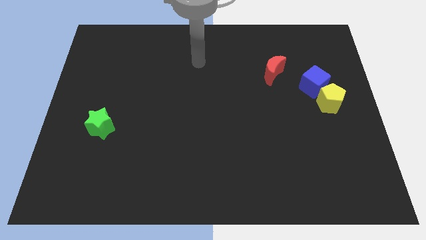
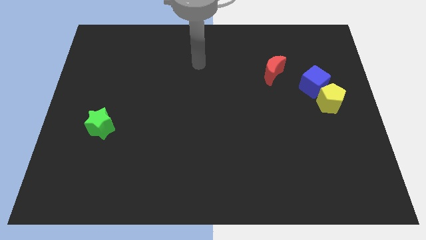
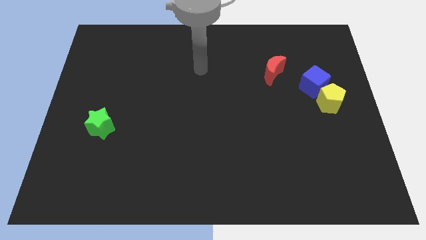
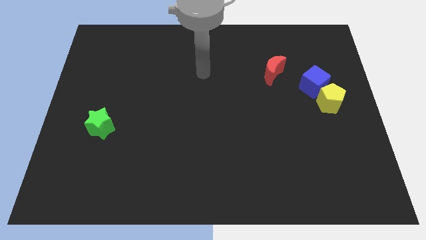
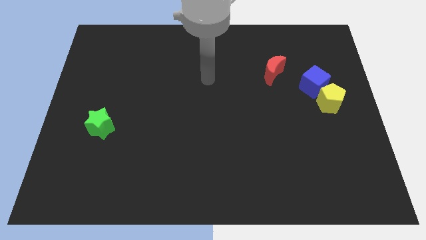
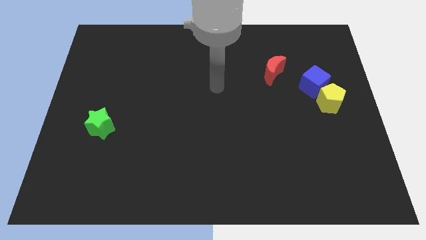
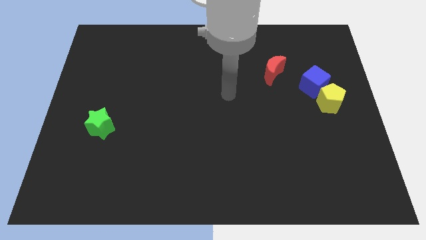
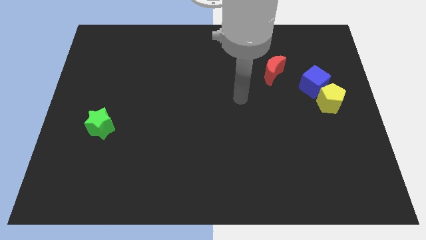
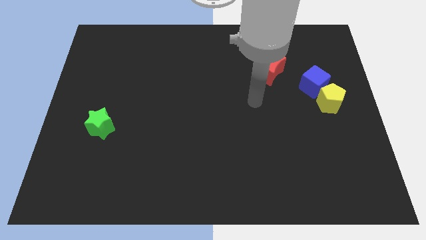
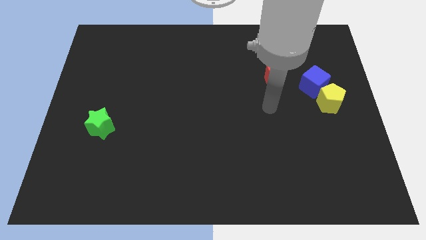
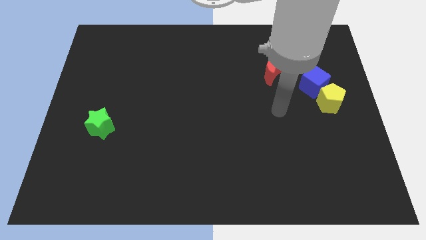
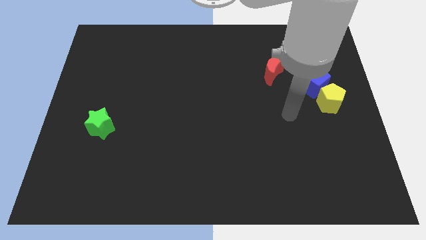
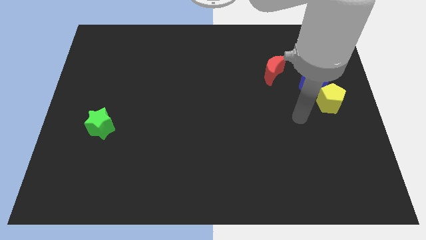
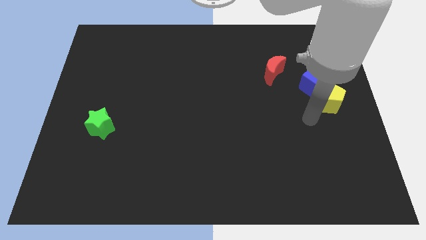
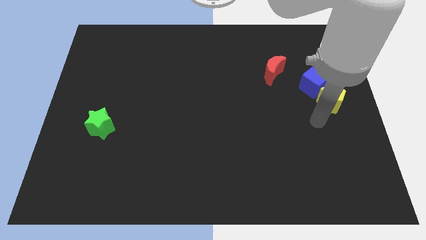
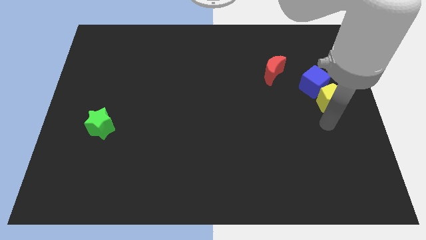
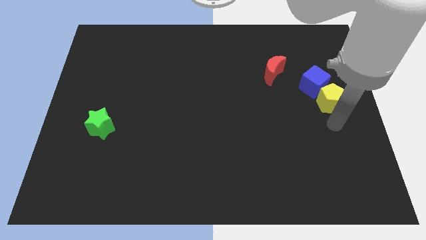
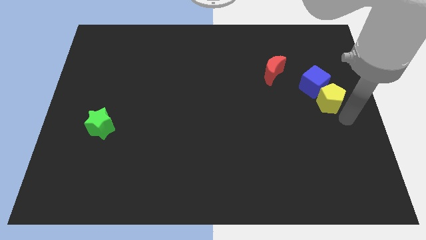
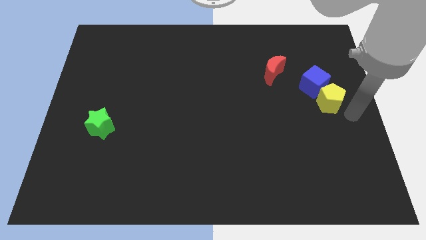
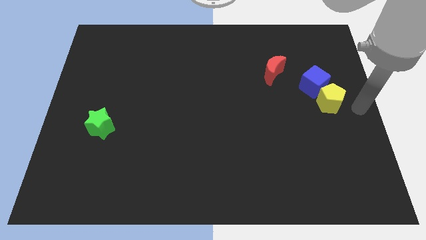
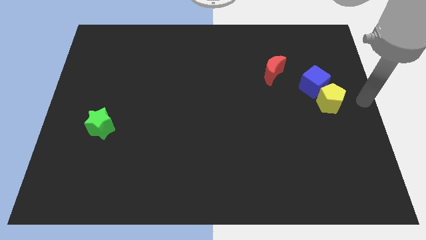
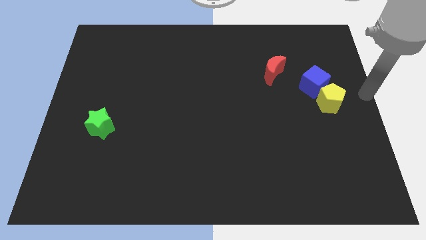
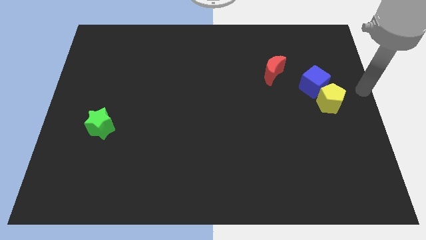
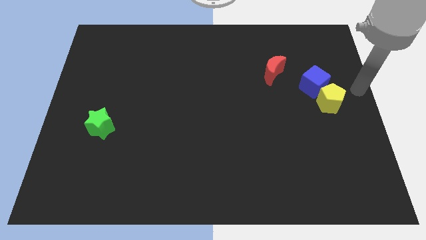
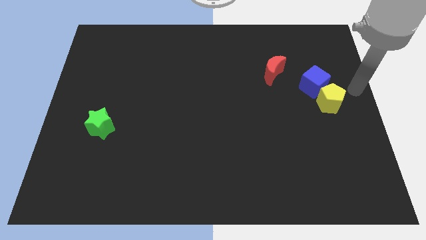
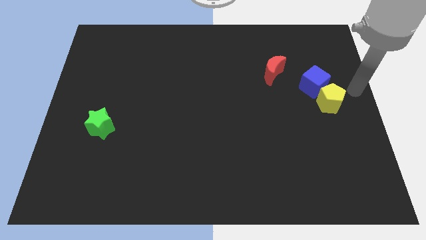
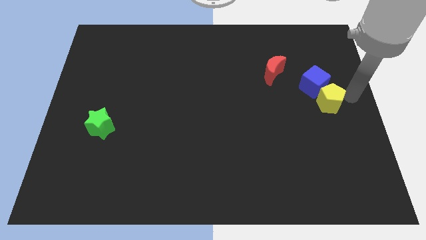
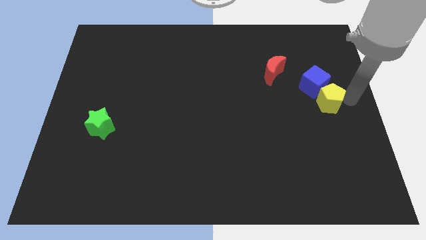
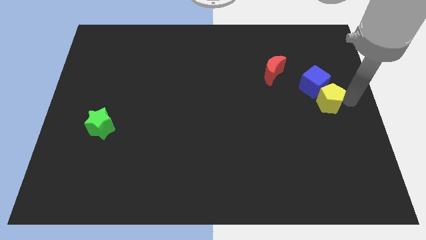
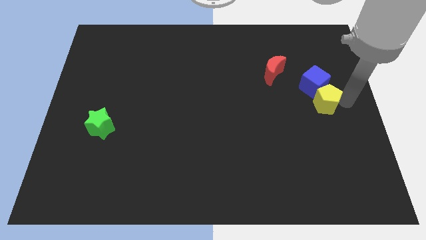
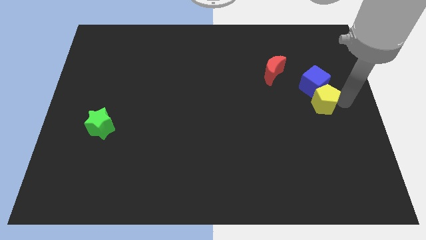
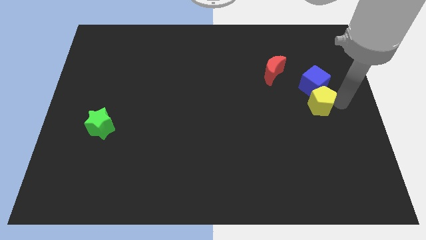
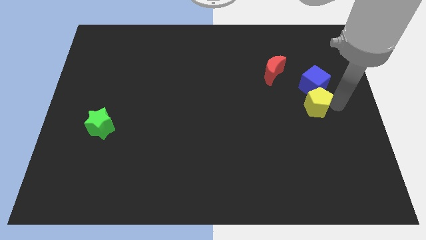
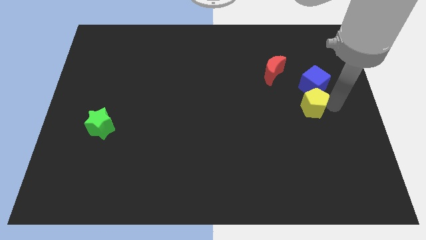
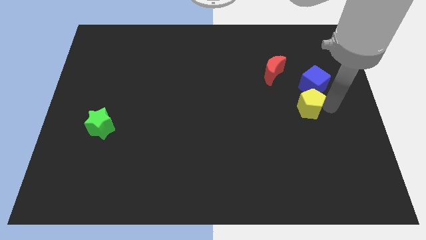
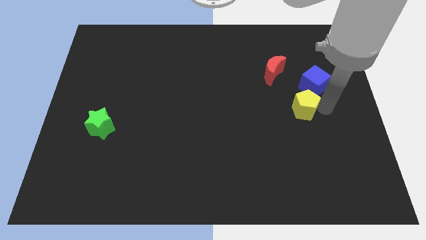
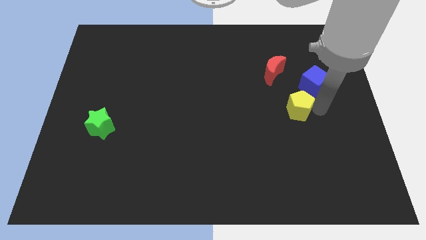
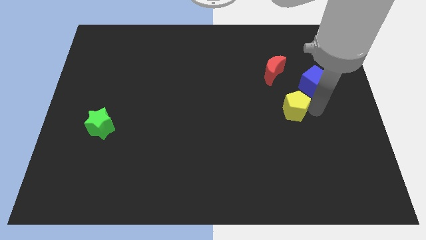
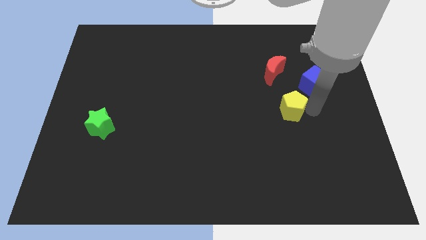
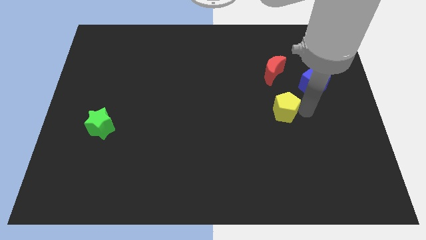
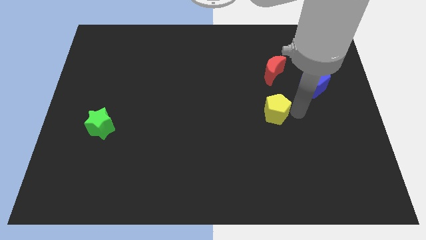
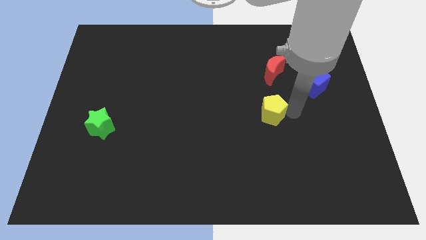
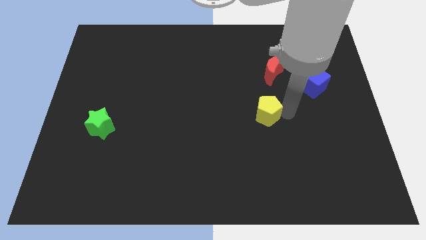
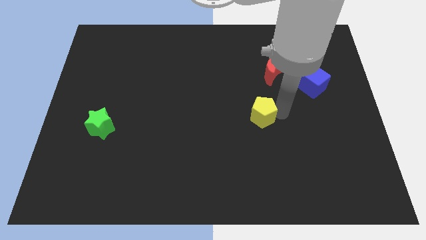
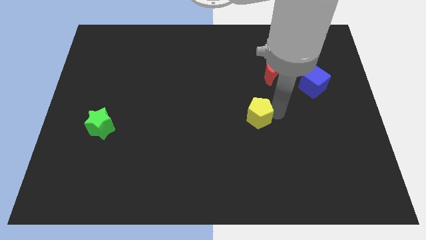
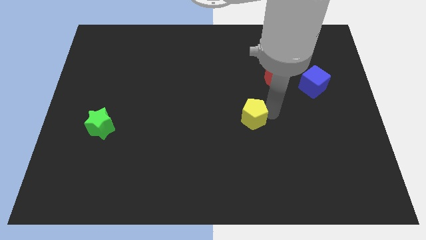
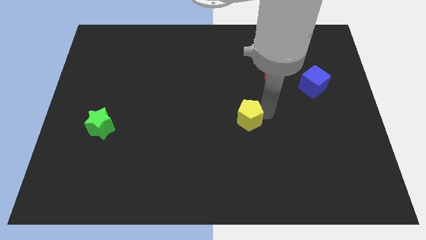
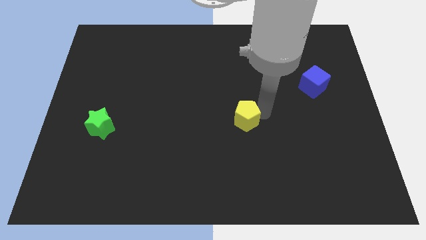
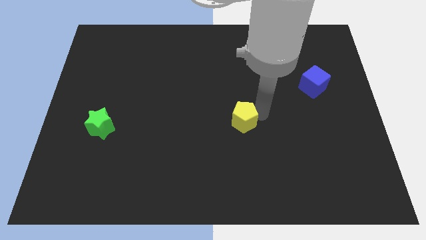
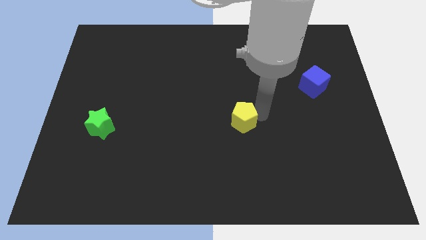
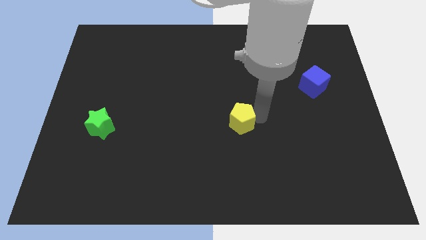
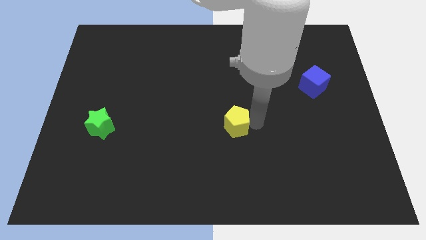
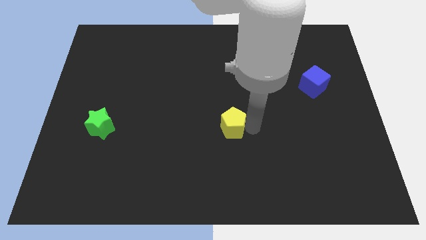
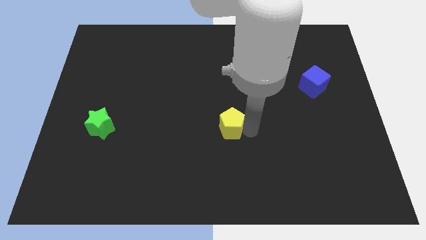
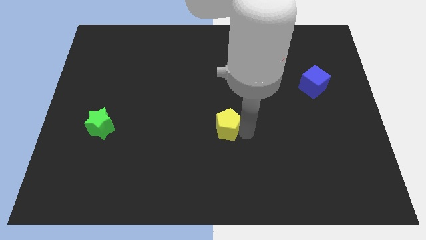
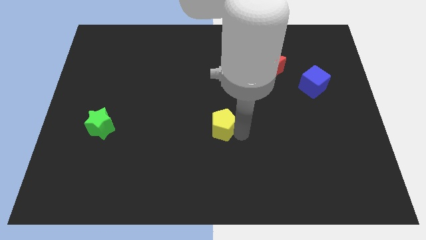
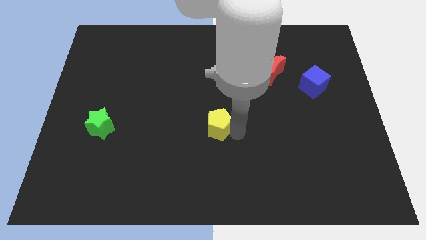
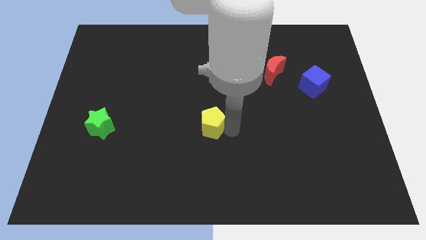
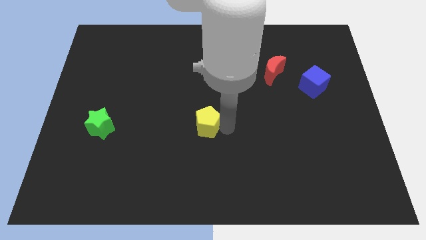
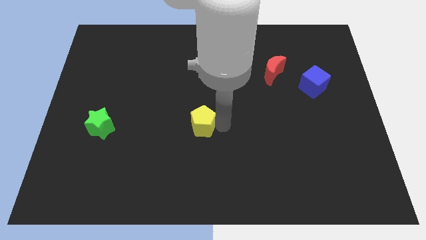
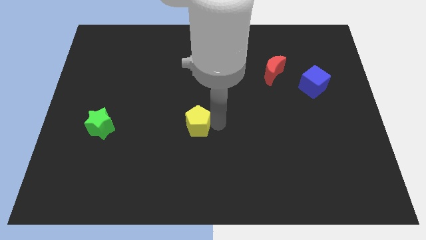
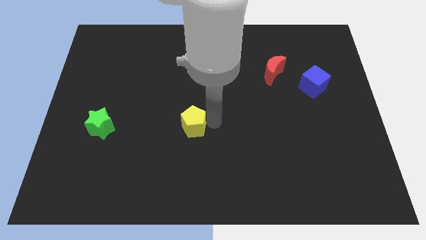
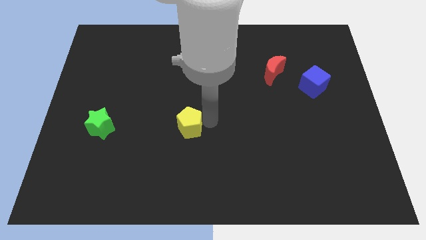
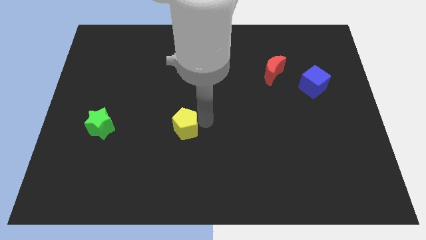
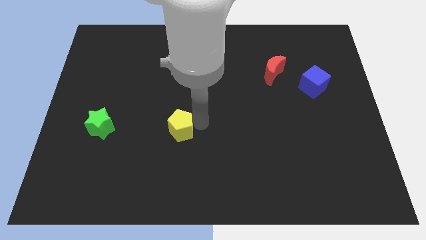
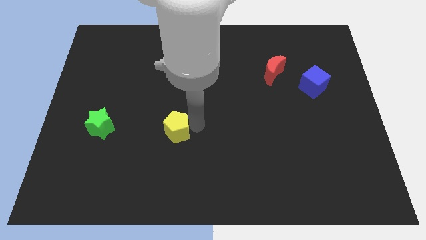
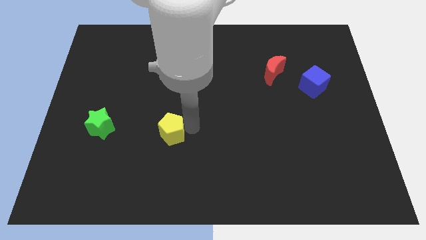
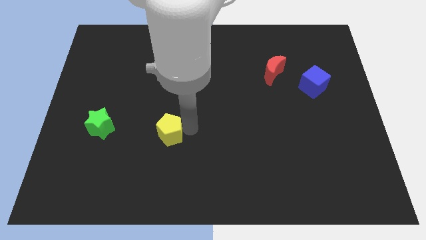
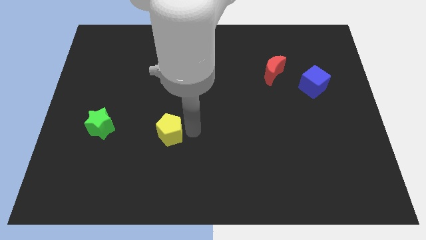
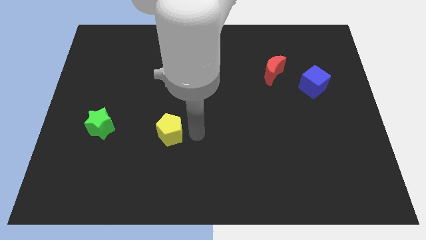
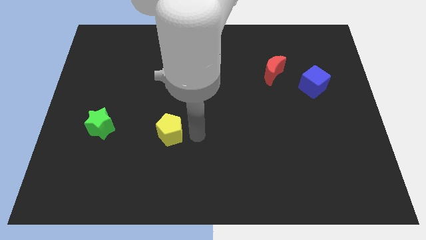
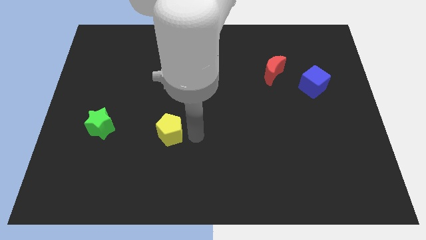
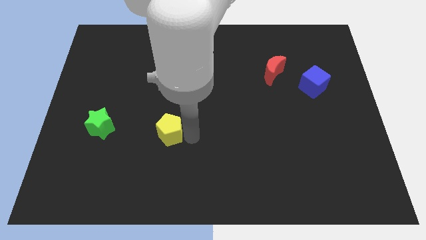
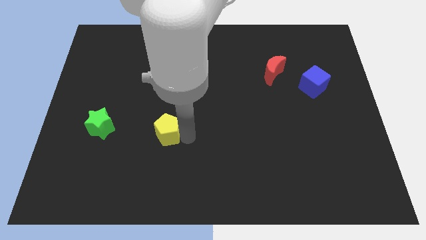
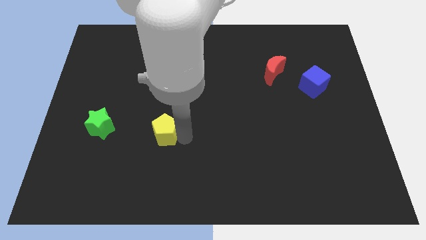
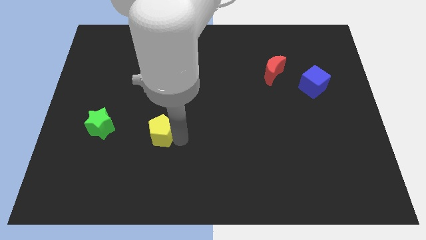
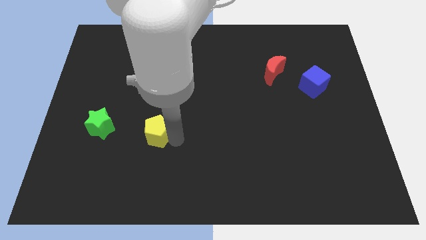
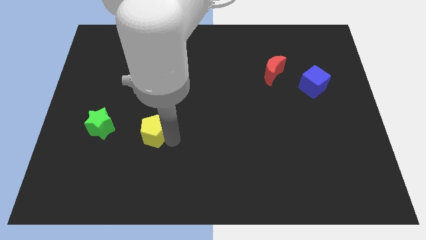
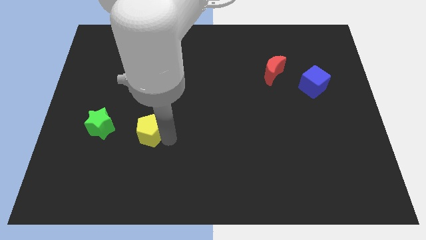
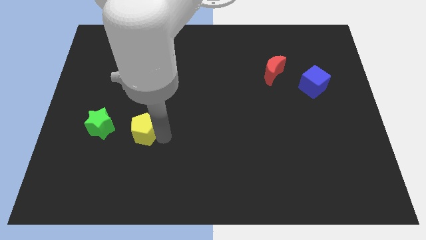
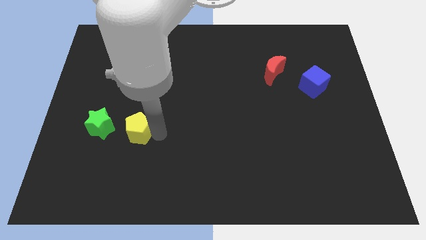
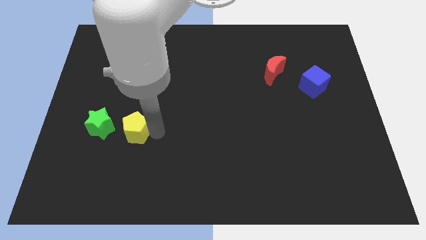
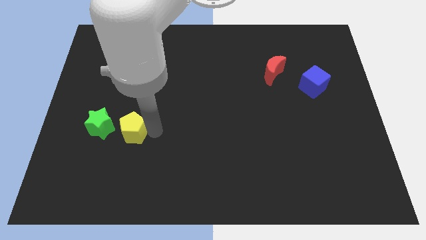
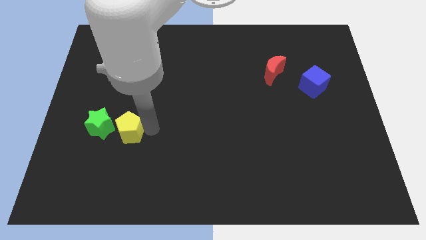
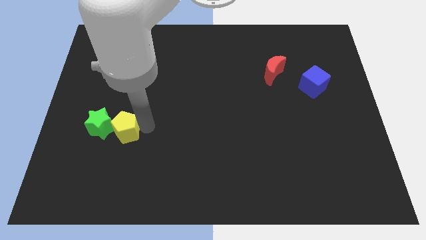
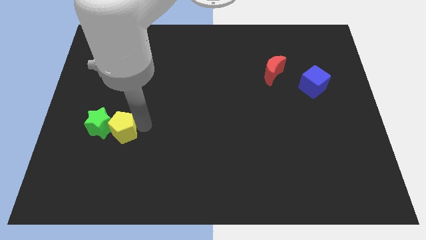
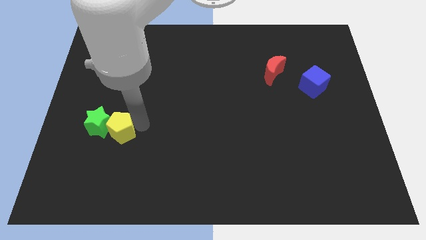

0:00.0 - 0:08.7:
put the pentagon towards the green block
